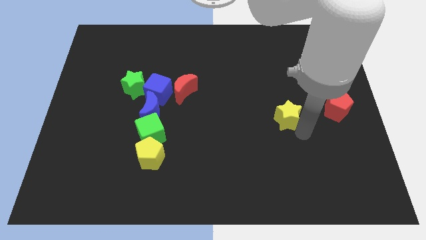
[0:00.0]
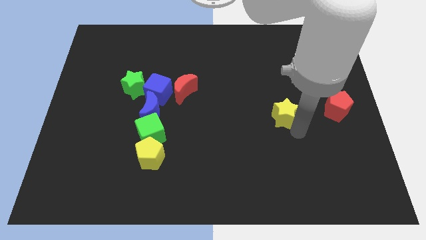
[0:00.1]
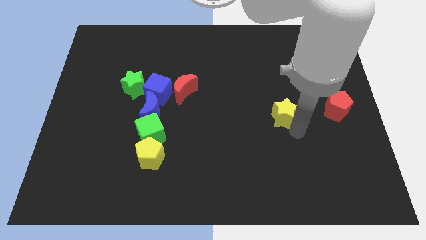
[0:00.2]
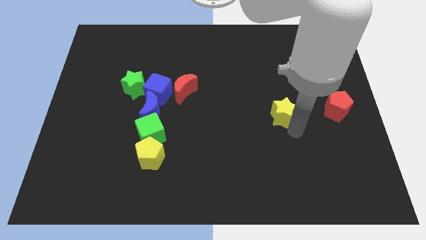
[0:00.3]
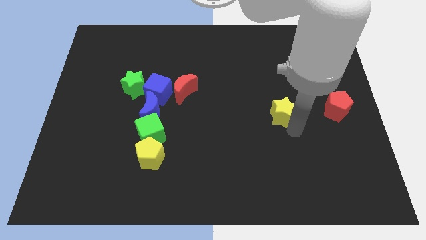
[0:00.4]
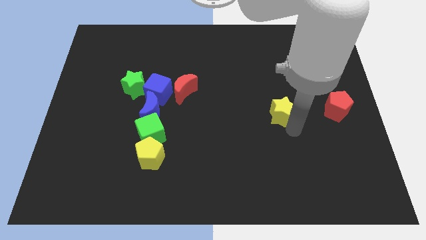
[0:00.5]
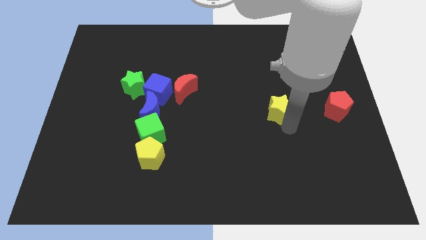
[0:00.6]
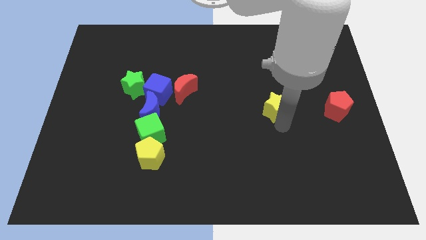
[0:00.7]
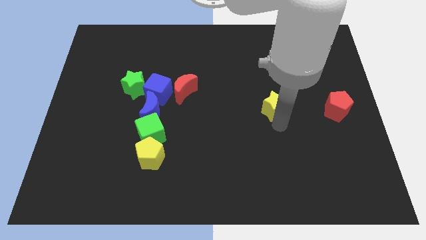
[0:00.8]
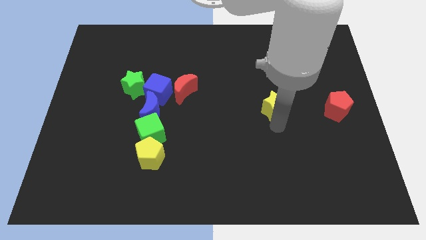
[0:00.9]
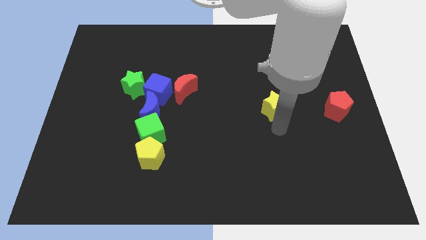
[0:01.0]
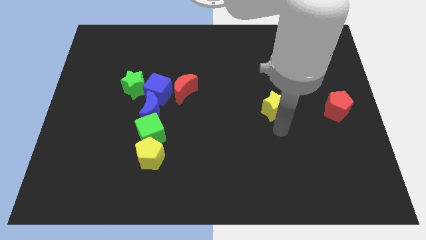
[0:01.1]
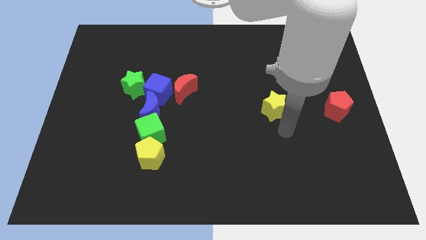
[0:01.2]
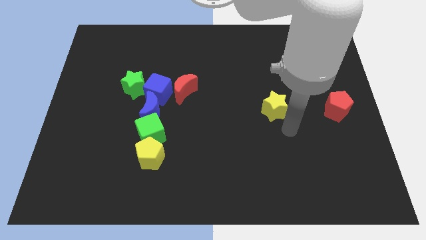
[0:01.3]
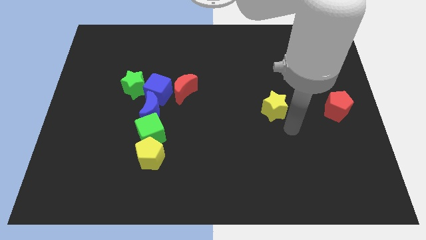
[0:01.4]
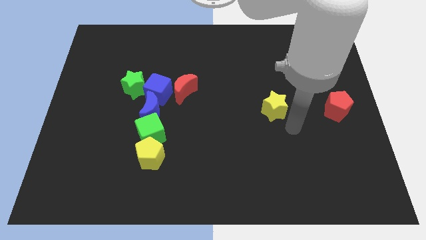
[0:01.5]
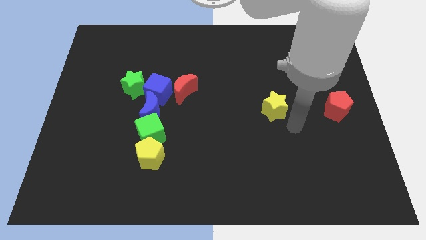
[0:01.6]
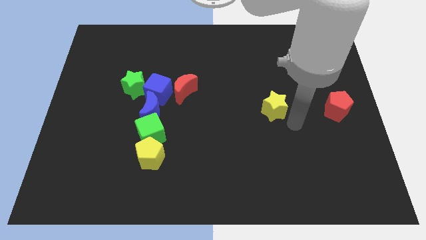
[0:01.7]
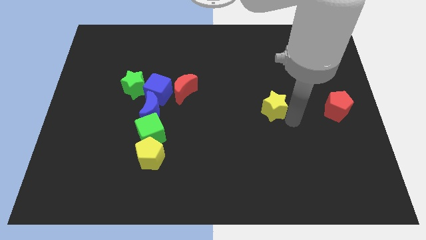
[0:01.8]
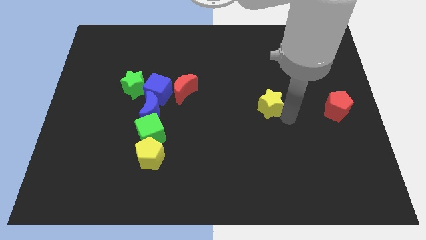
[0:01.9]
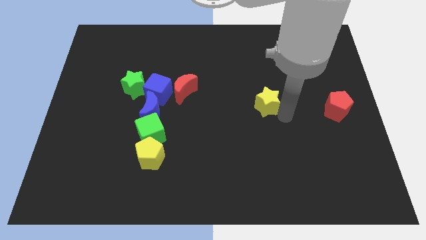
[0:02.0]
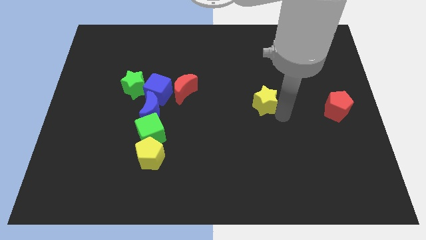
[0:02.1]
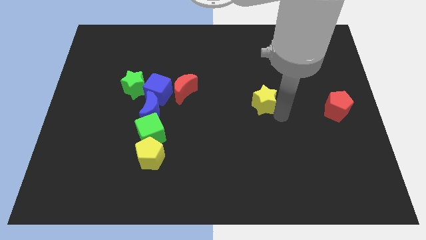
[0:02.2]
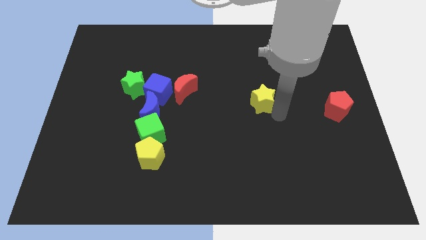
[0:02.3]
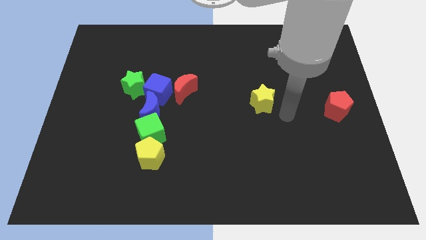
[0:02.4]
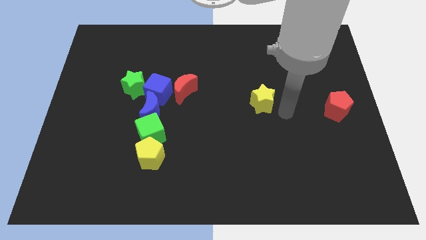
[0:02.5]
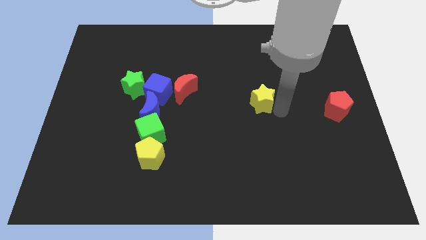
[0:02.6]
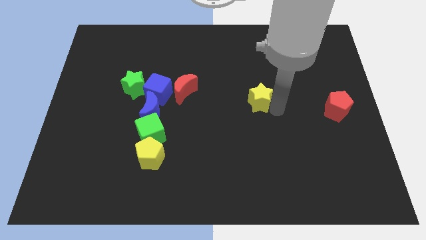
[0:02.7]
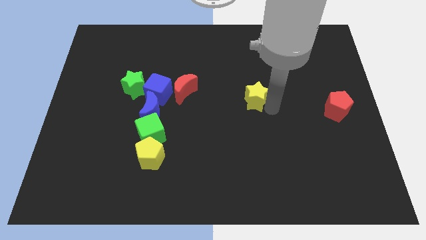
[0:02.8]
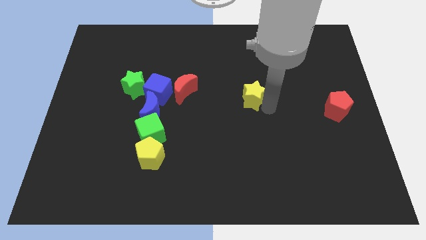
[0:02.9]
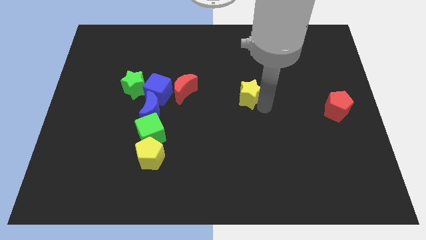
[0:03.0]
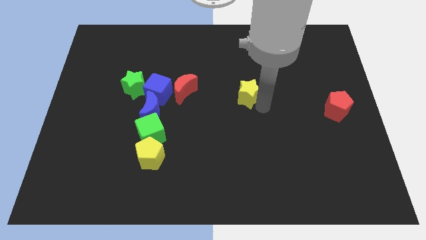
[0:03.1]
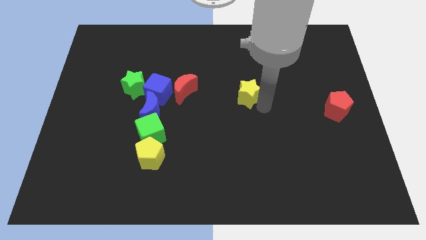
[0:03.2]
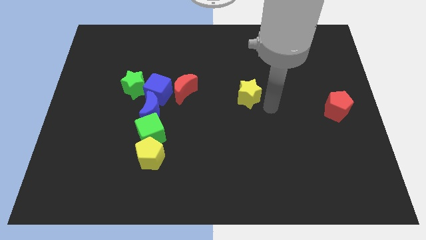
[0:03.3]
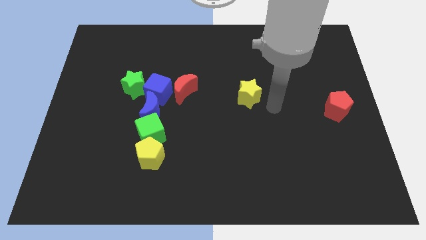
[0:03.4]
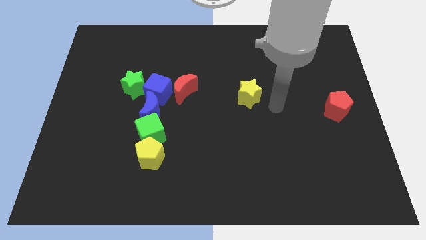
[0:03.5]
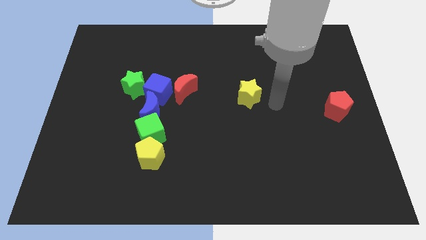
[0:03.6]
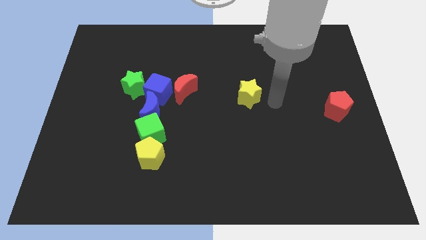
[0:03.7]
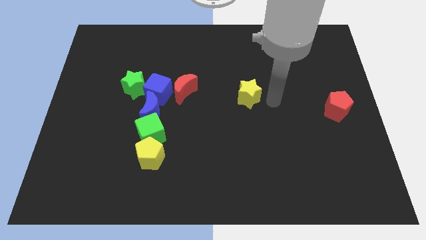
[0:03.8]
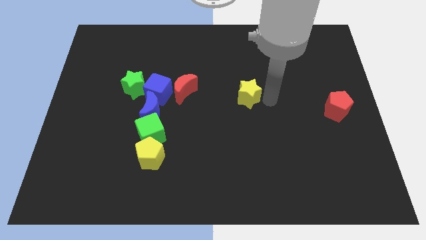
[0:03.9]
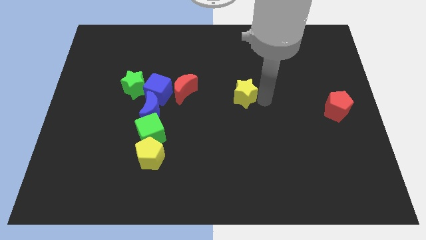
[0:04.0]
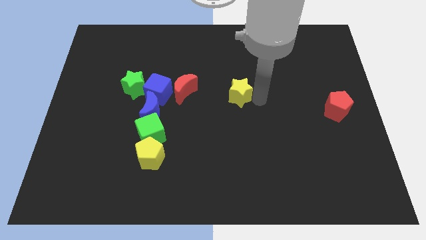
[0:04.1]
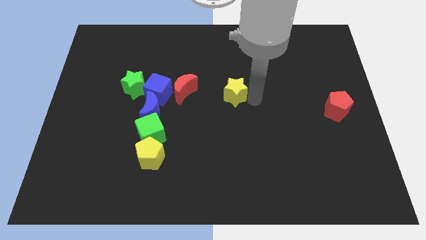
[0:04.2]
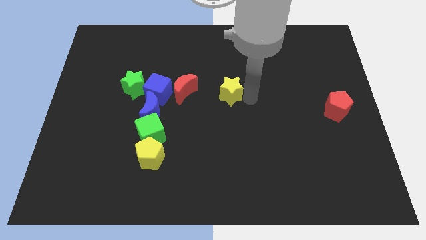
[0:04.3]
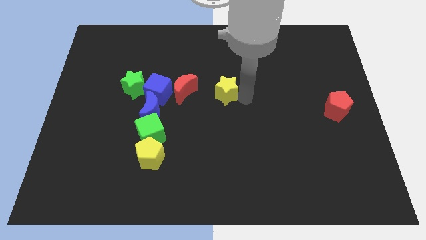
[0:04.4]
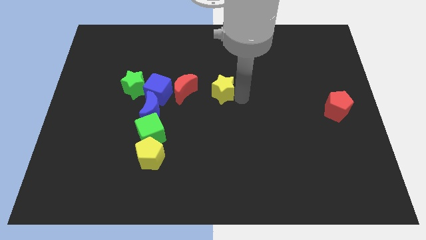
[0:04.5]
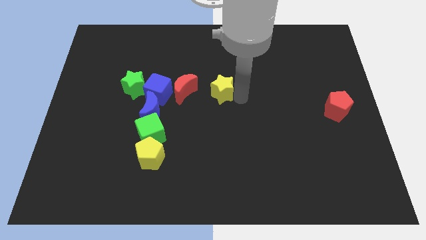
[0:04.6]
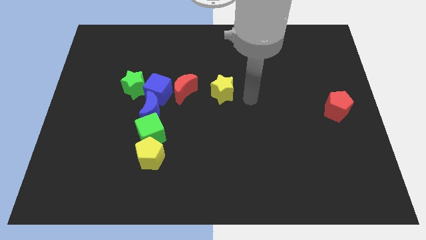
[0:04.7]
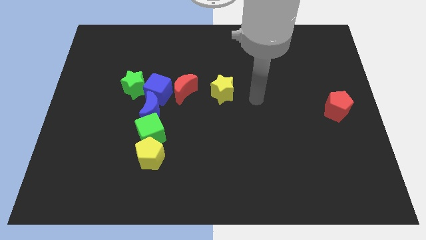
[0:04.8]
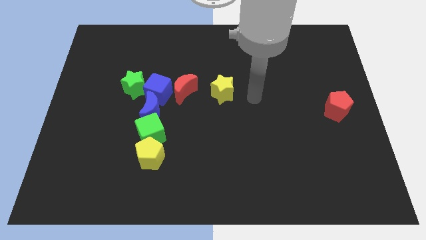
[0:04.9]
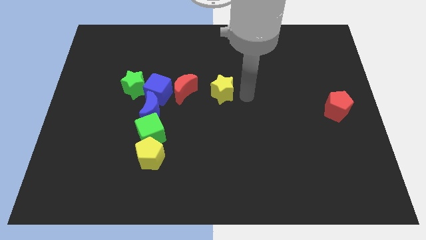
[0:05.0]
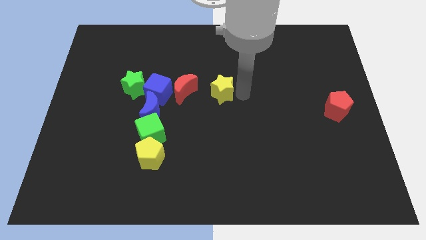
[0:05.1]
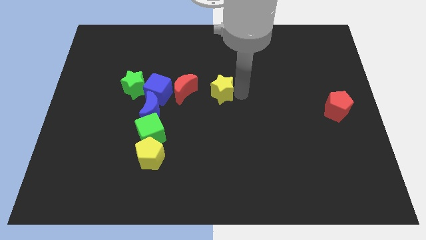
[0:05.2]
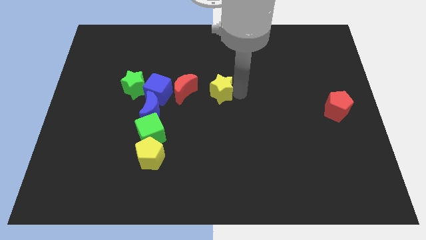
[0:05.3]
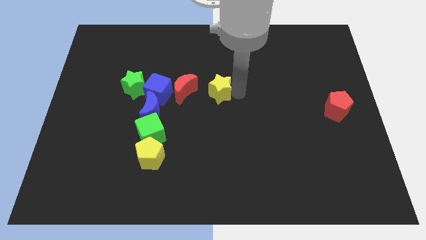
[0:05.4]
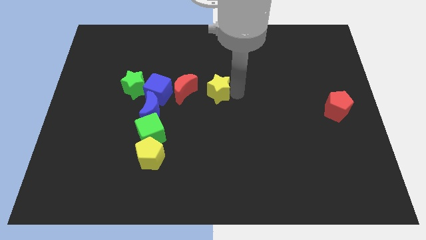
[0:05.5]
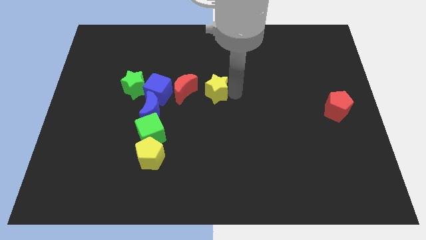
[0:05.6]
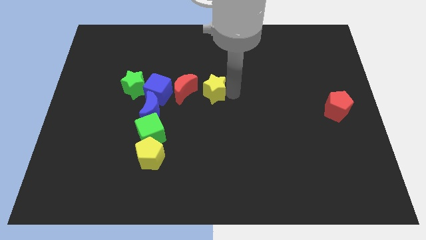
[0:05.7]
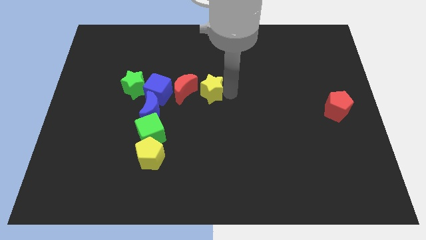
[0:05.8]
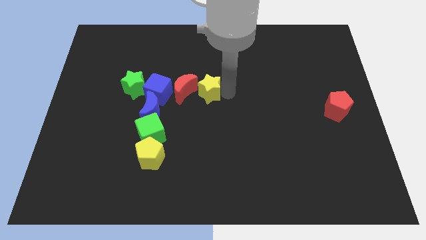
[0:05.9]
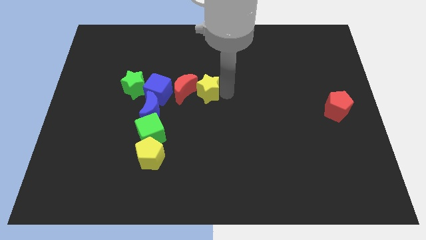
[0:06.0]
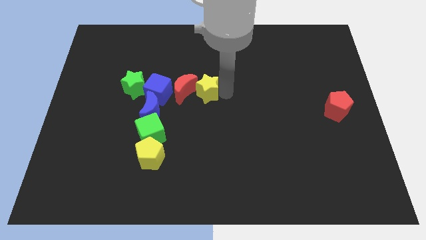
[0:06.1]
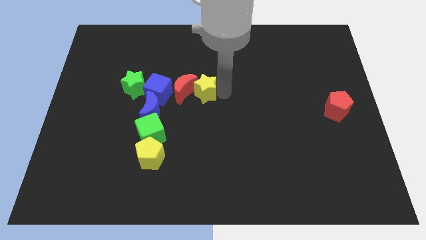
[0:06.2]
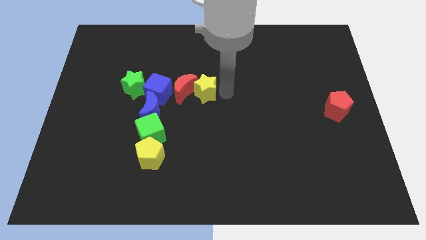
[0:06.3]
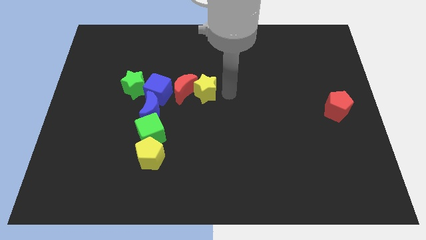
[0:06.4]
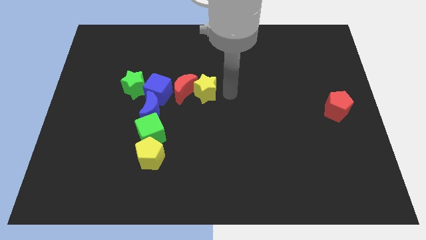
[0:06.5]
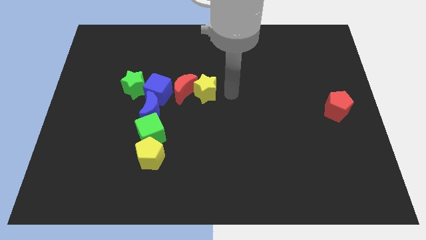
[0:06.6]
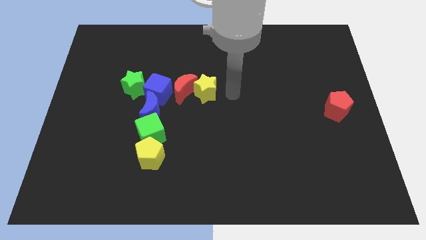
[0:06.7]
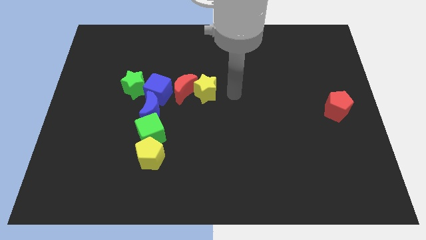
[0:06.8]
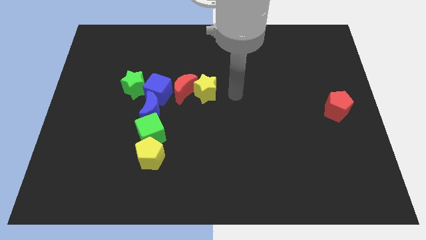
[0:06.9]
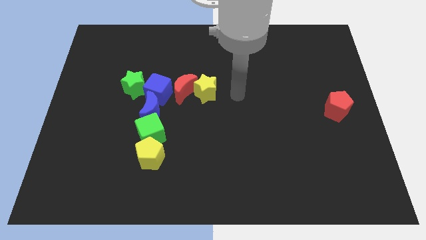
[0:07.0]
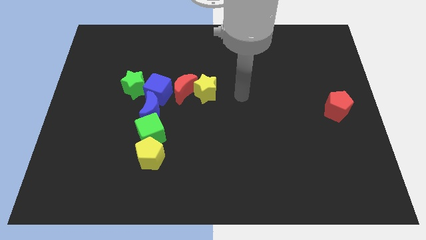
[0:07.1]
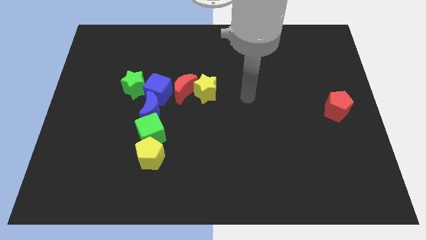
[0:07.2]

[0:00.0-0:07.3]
put the yellow star on the right side of the red moon

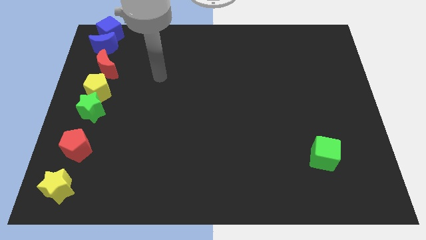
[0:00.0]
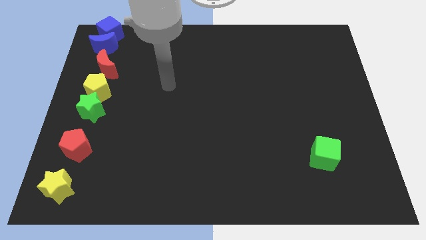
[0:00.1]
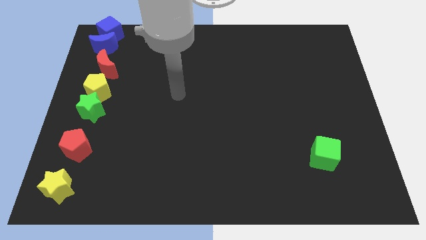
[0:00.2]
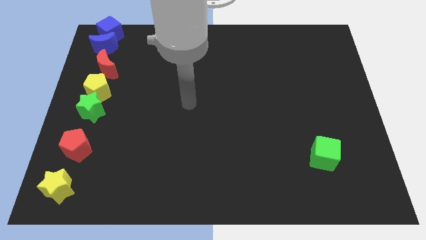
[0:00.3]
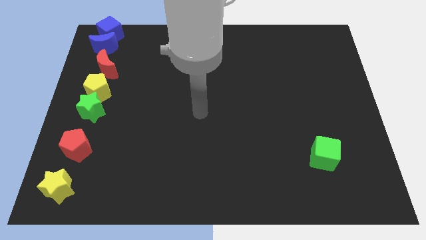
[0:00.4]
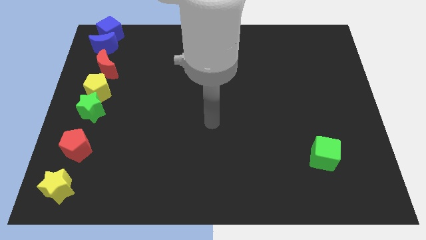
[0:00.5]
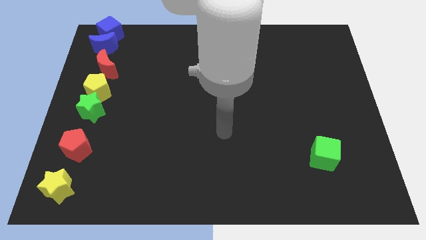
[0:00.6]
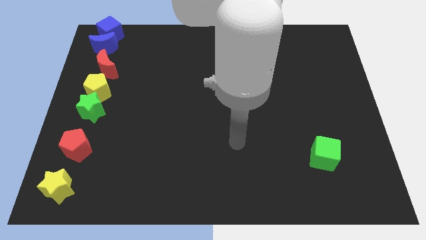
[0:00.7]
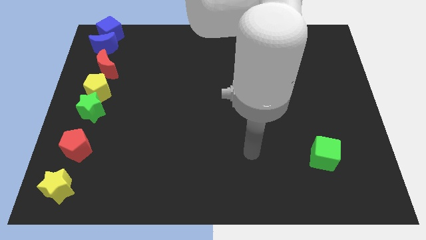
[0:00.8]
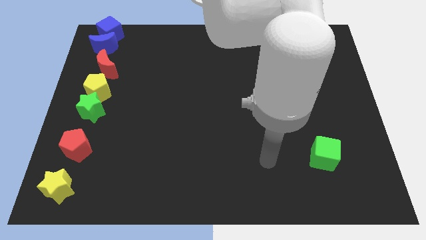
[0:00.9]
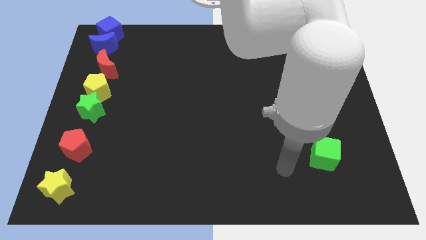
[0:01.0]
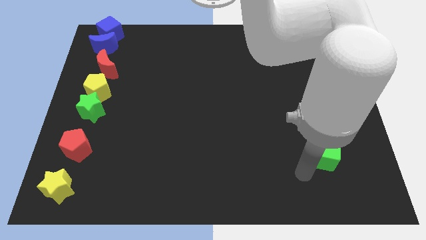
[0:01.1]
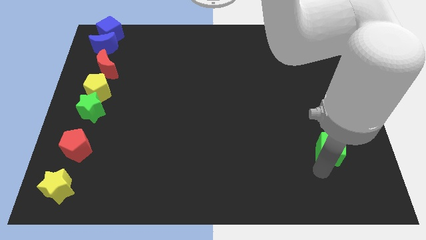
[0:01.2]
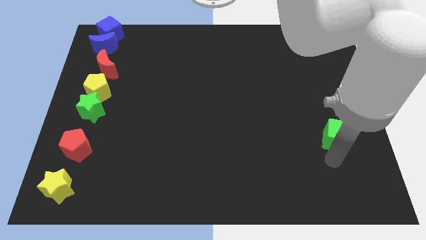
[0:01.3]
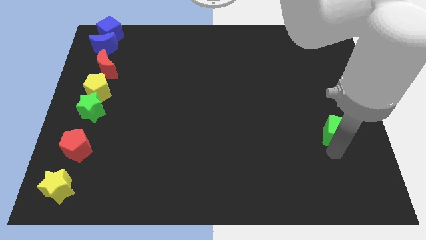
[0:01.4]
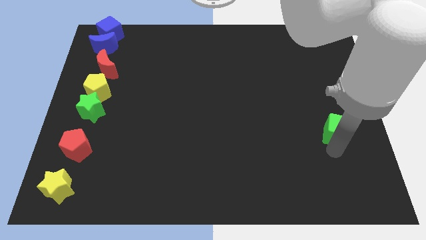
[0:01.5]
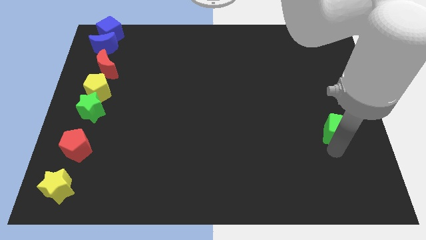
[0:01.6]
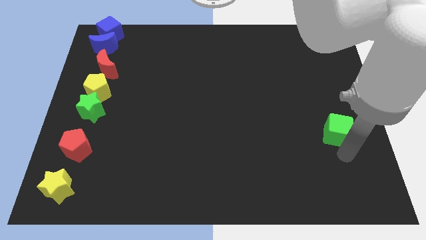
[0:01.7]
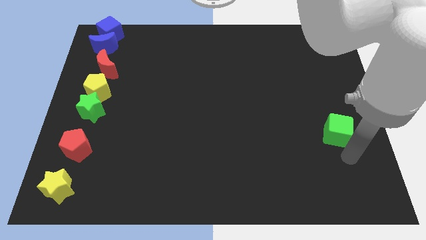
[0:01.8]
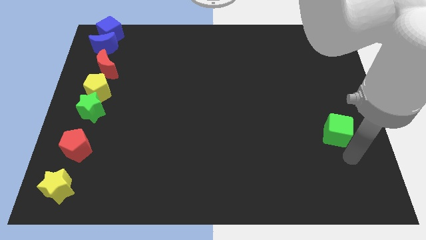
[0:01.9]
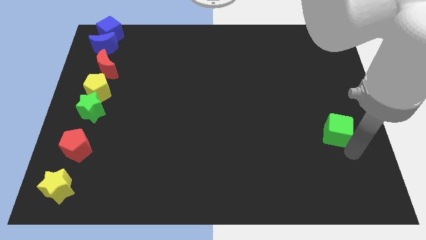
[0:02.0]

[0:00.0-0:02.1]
move the green cube slightlyu up
